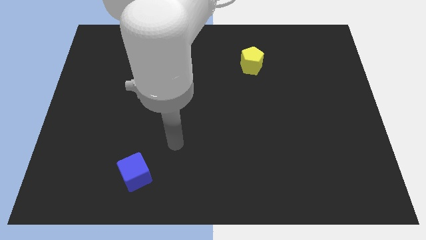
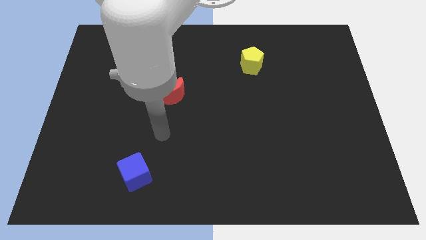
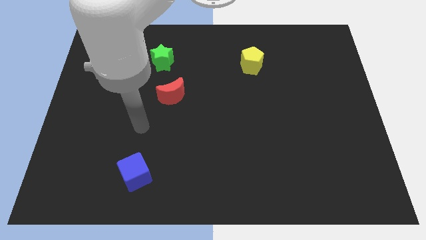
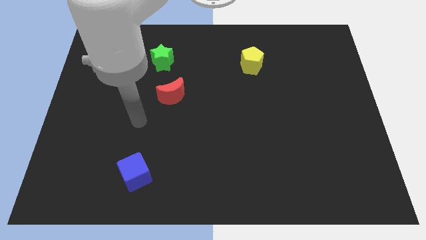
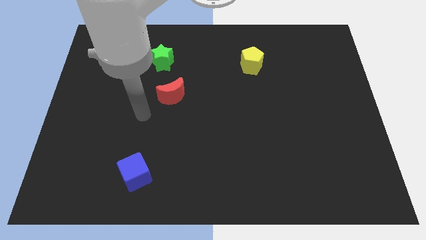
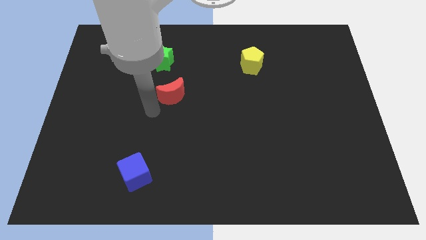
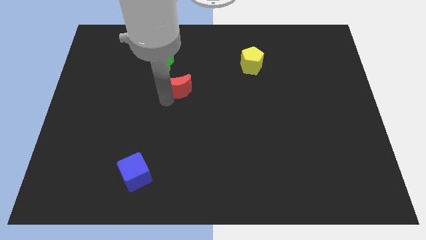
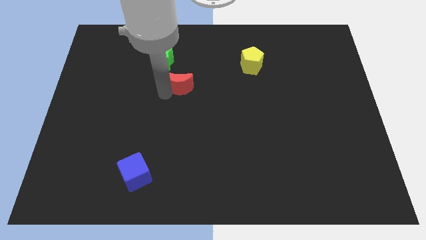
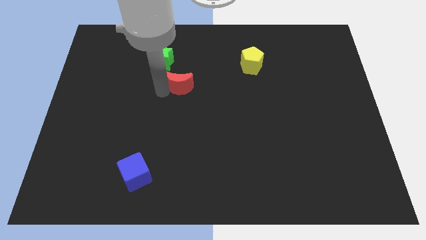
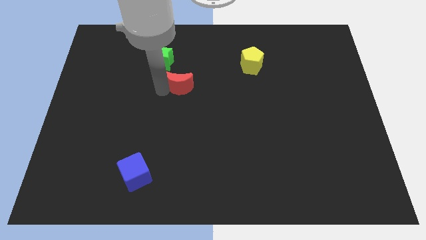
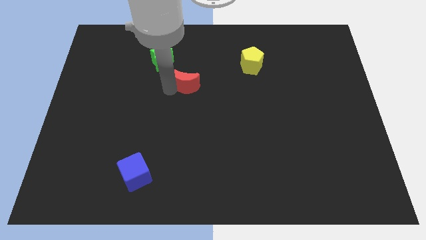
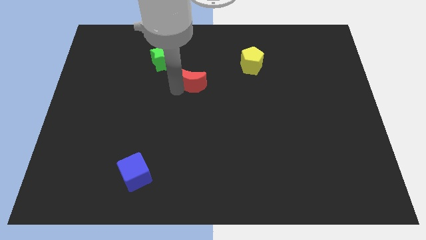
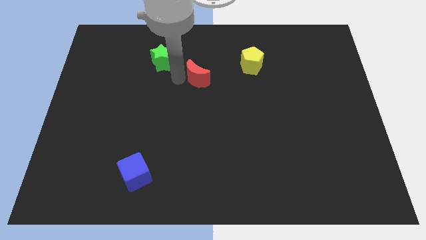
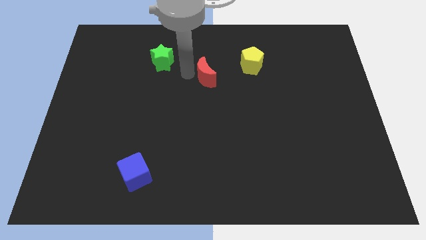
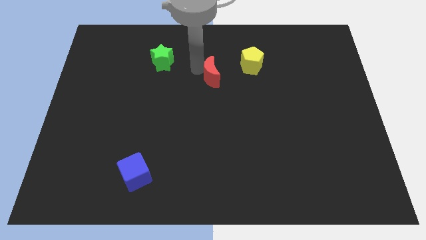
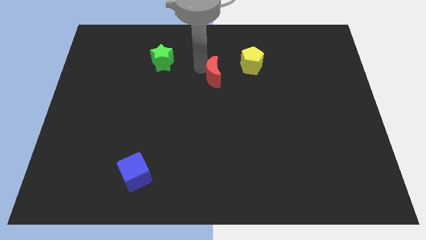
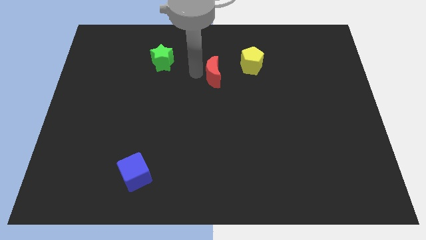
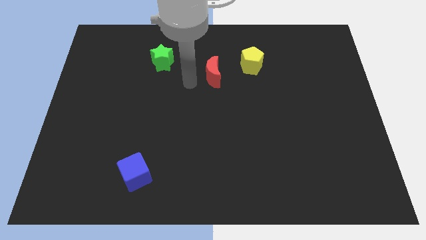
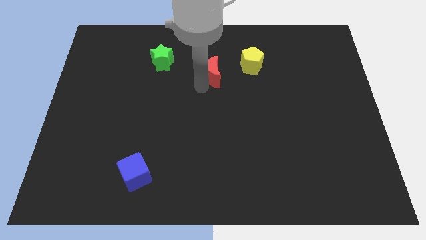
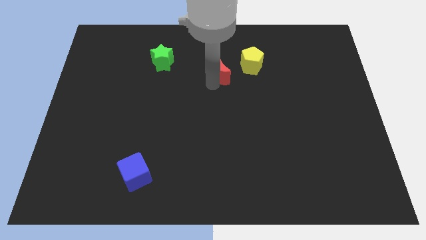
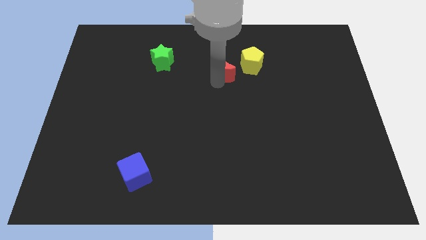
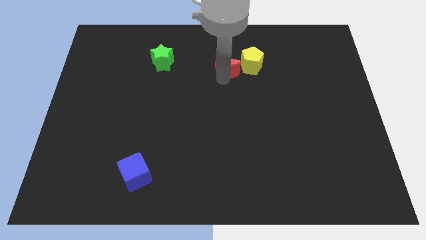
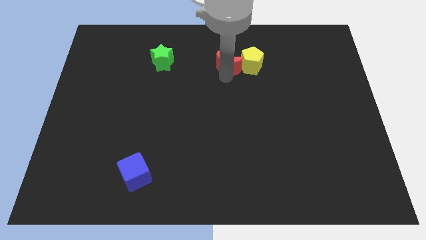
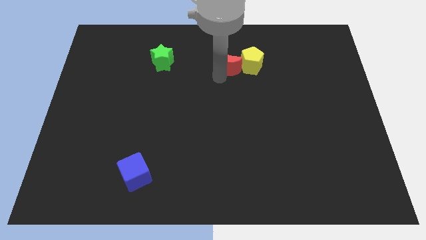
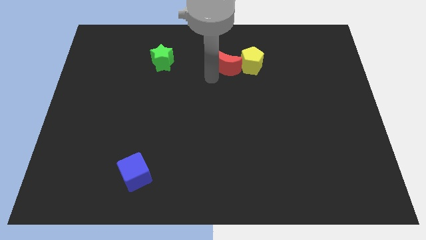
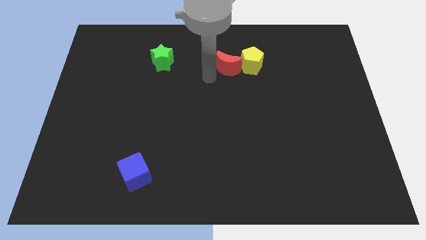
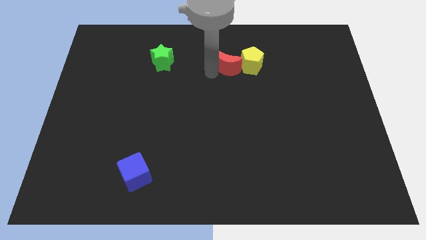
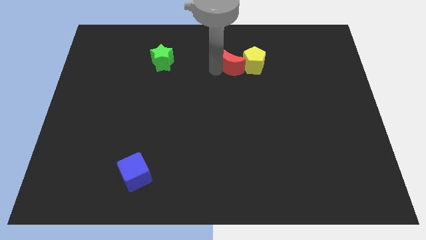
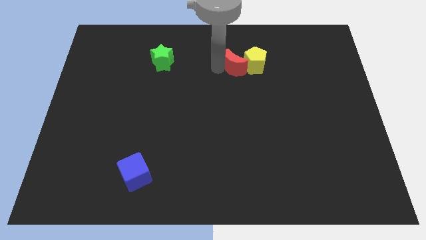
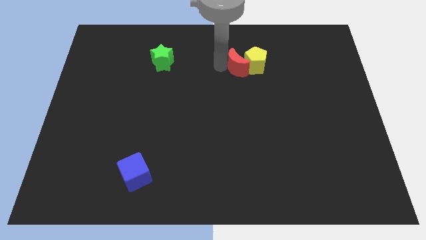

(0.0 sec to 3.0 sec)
move the red block towards the yellow pentagon

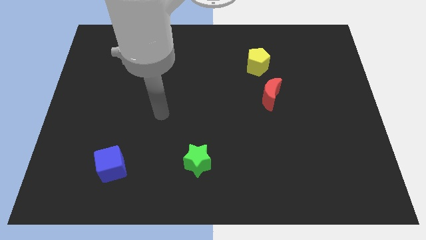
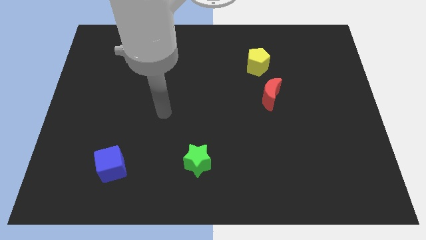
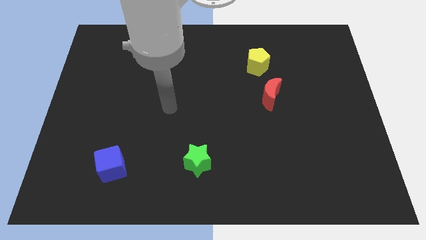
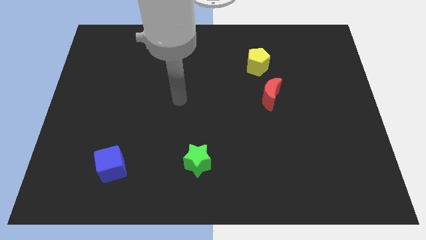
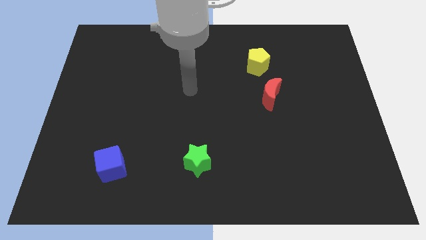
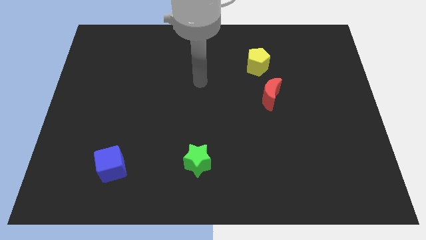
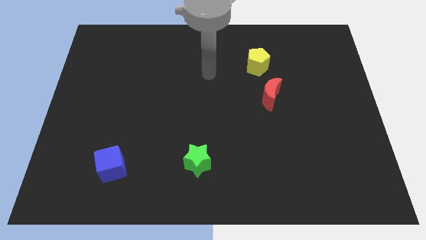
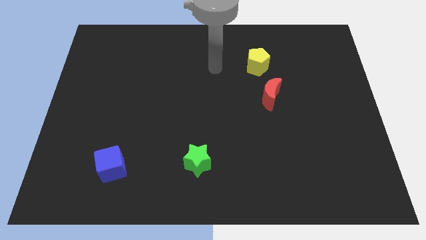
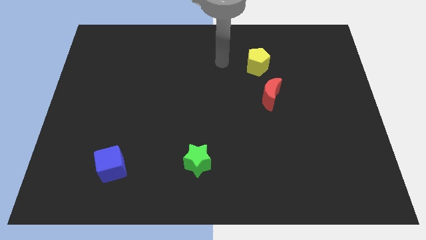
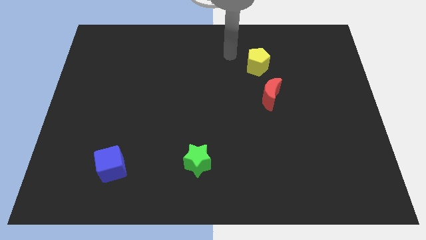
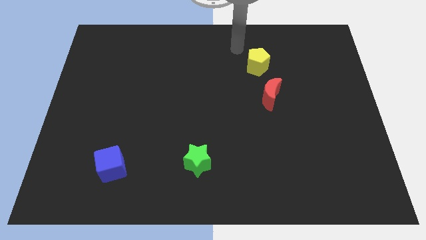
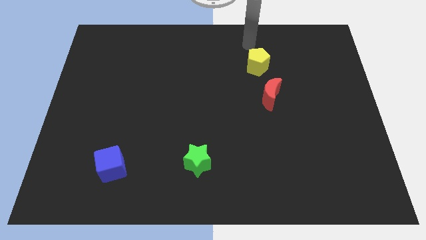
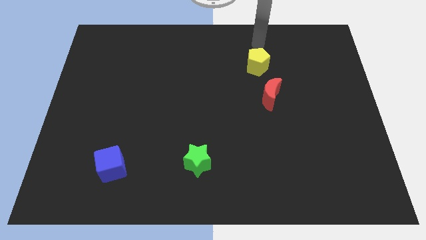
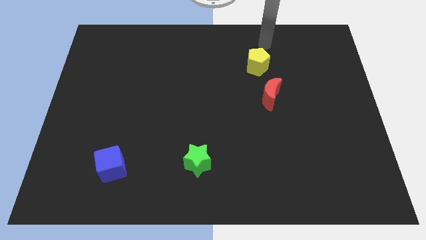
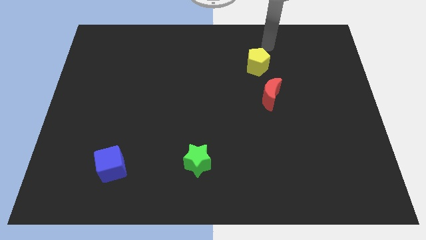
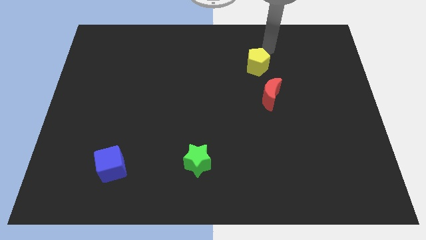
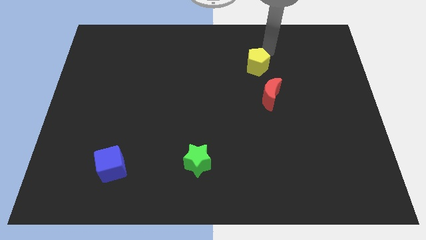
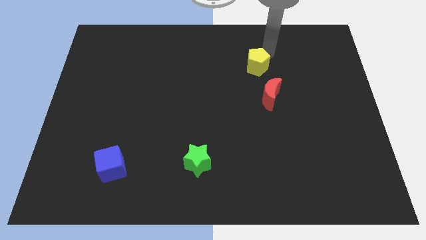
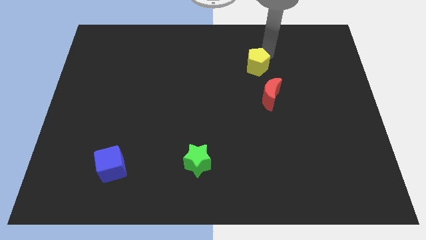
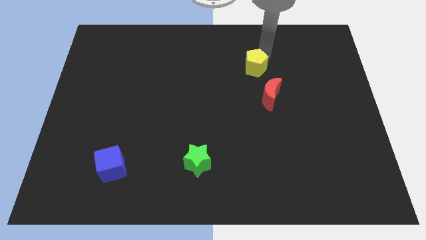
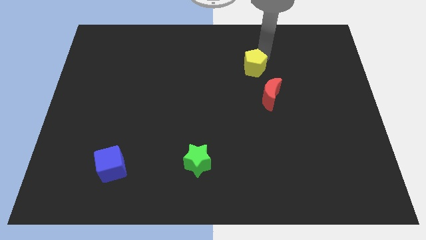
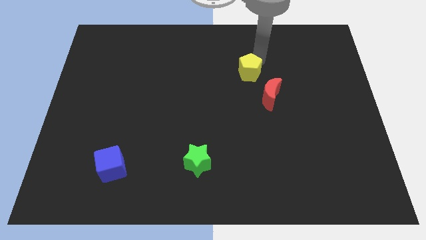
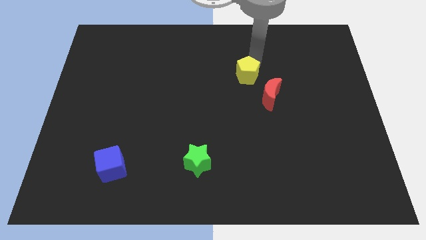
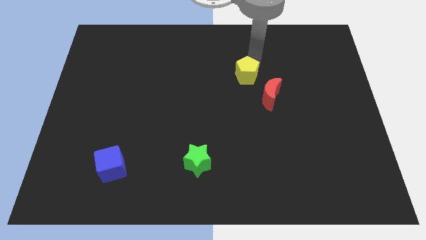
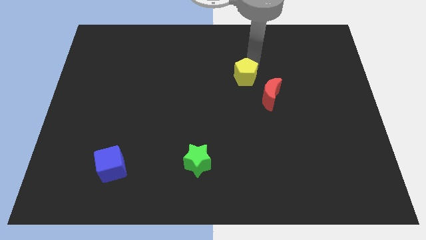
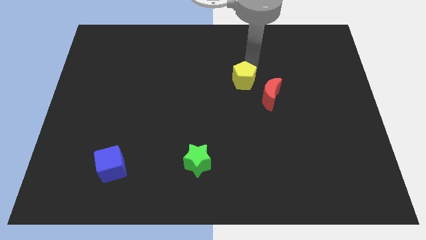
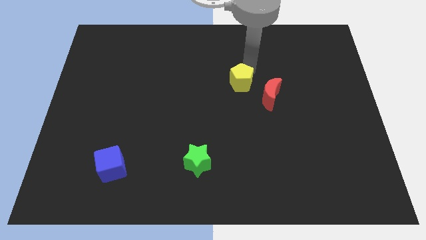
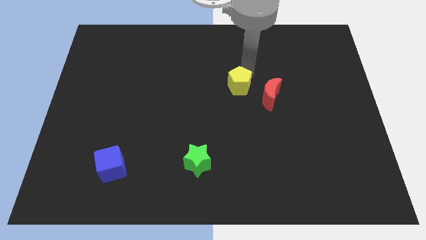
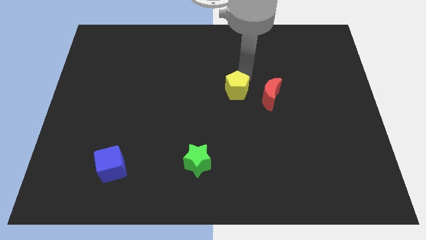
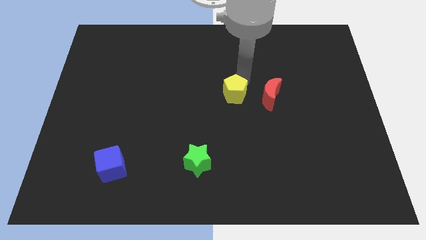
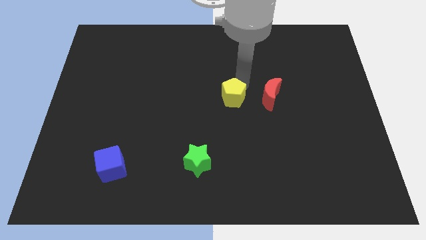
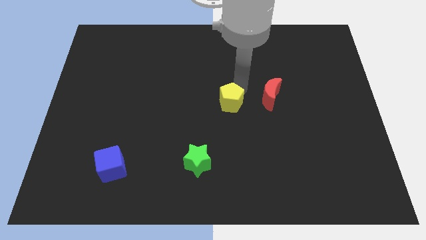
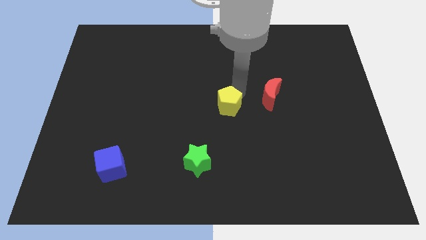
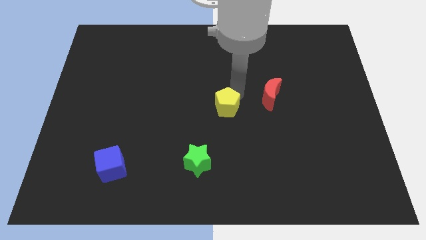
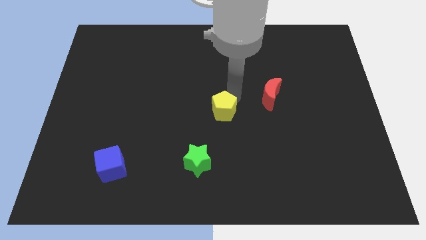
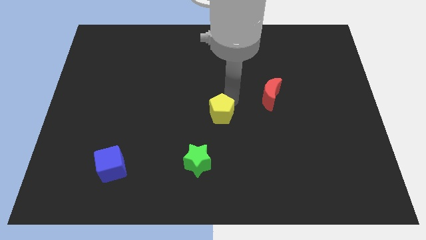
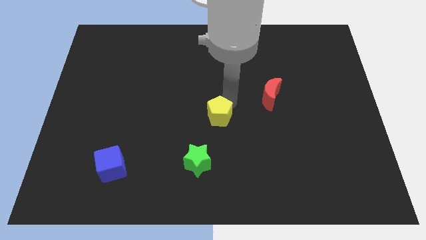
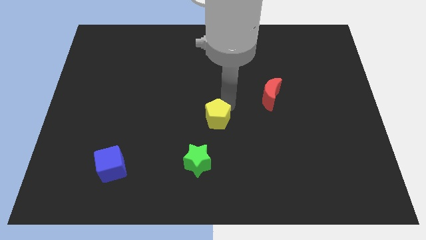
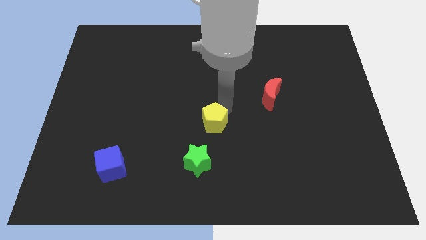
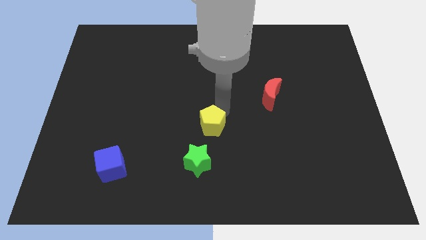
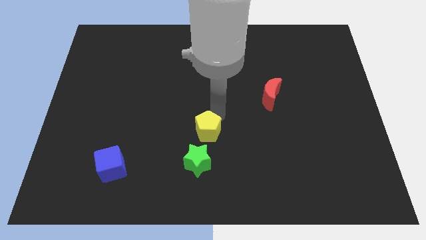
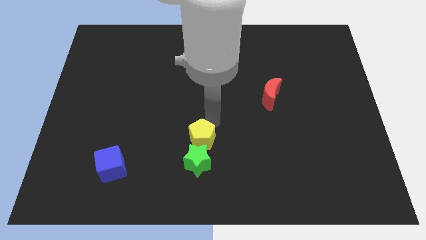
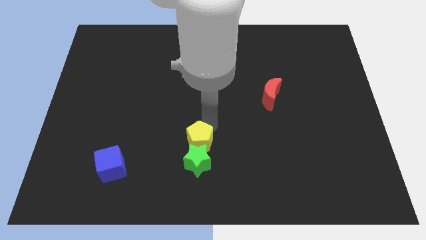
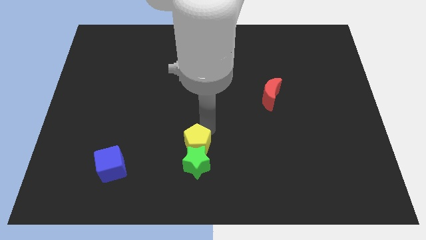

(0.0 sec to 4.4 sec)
move the pentagon towards the green block

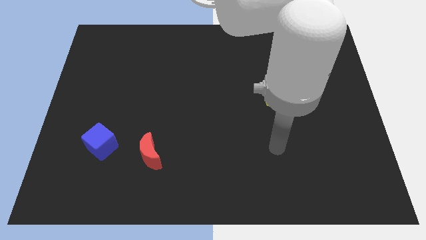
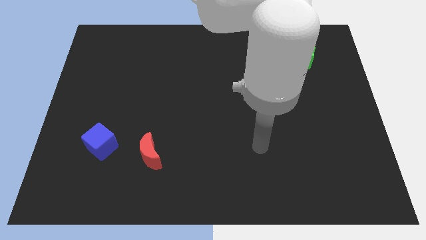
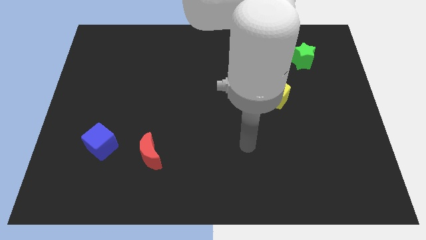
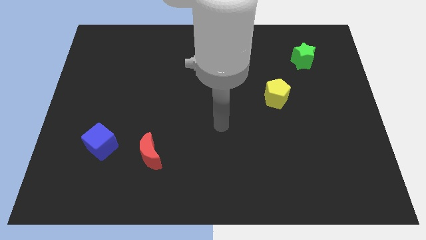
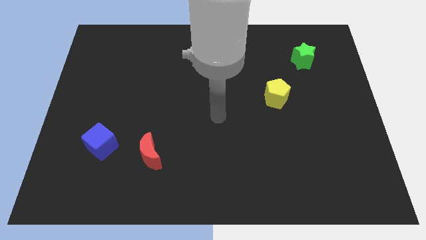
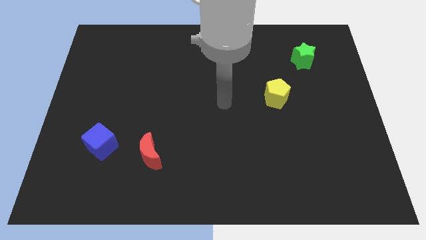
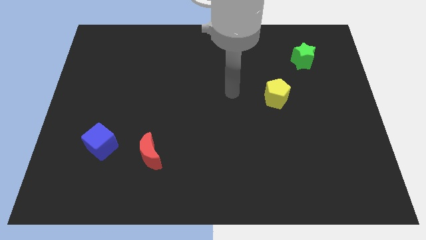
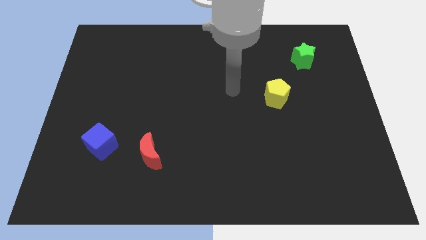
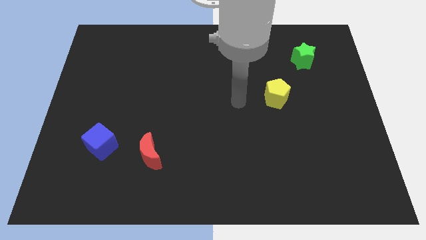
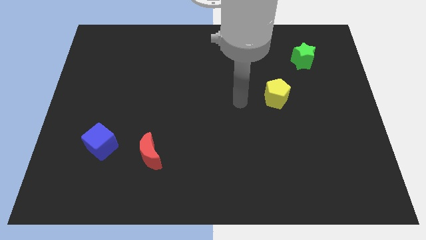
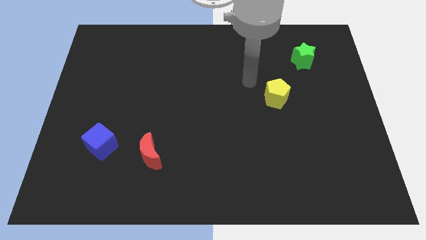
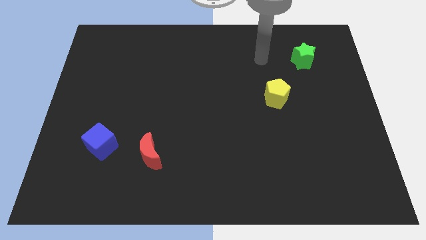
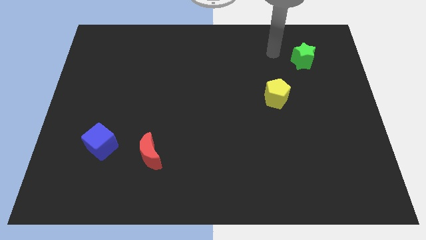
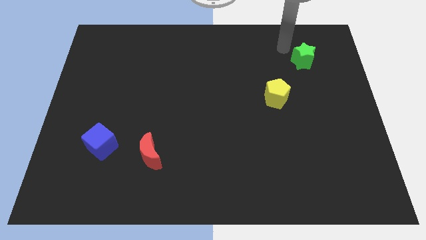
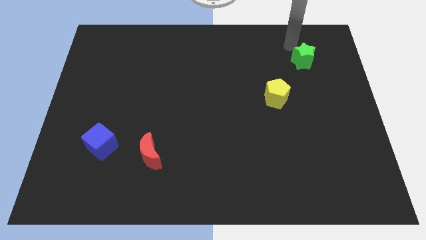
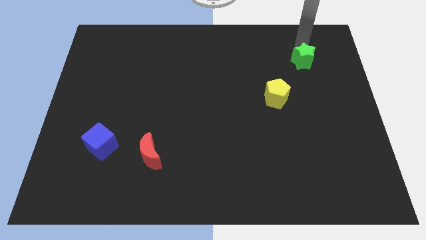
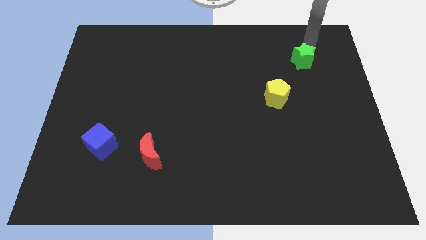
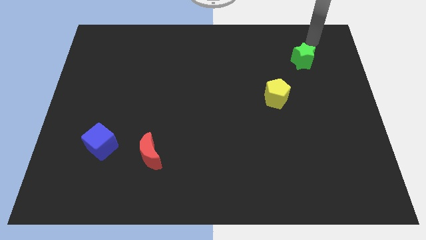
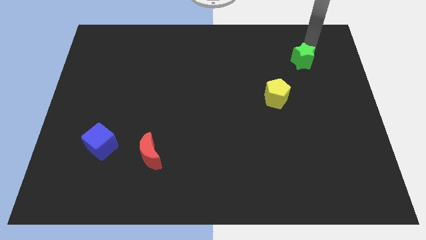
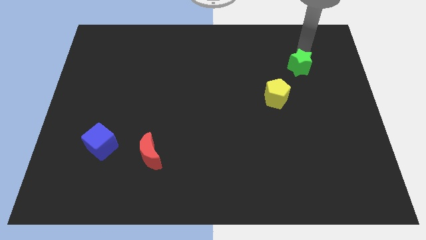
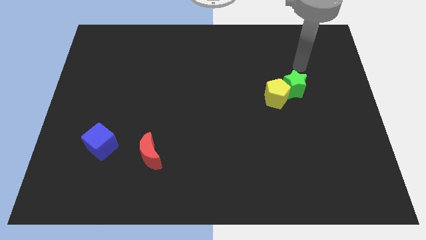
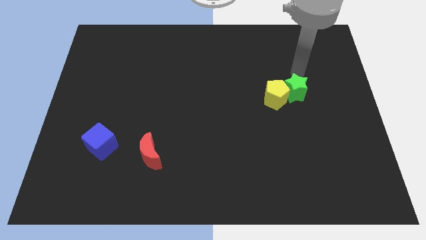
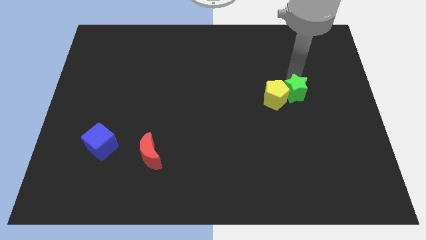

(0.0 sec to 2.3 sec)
slide the star close to the yellow pentagon
